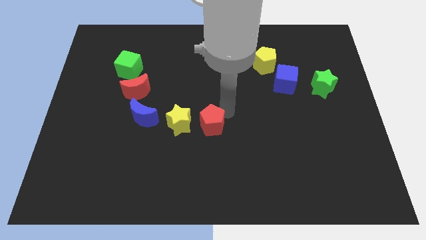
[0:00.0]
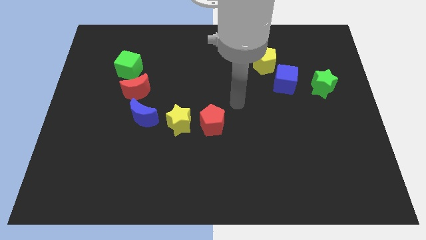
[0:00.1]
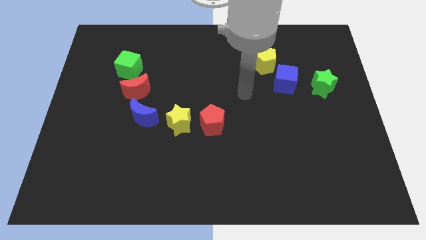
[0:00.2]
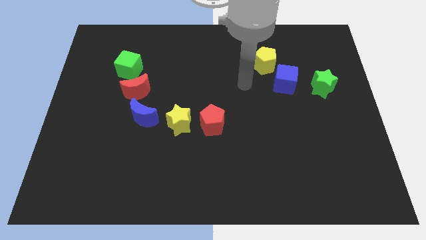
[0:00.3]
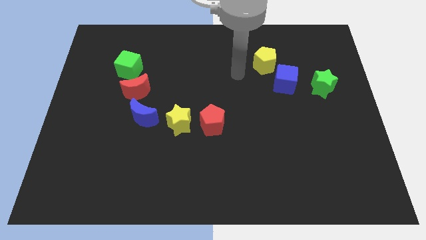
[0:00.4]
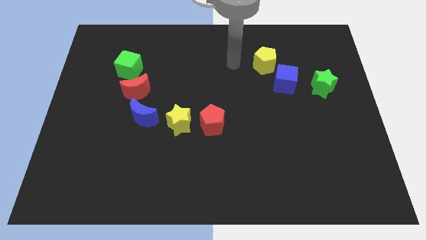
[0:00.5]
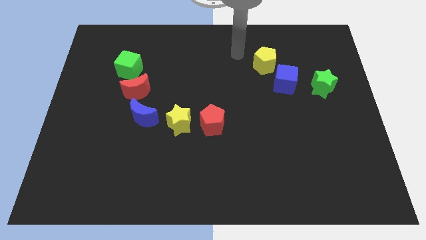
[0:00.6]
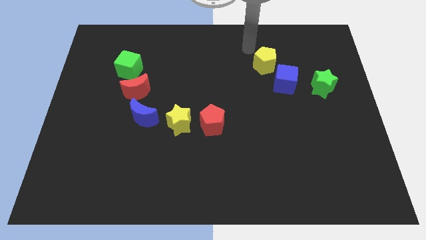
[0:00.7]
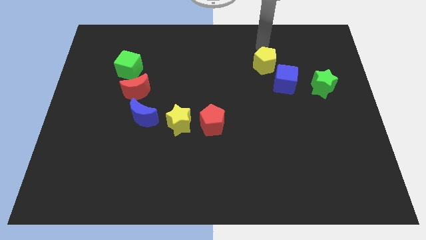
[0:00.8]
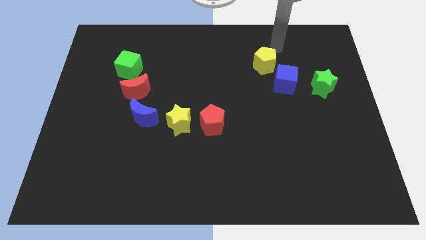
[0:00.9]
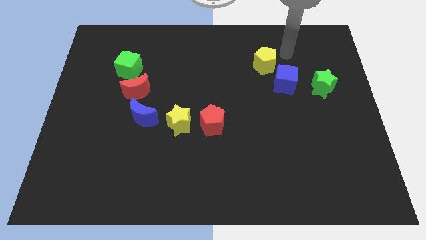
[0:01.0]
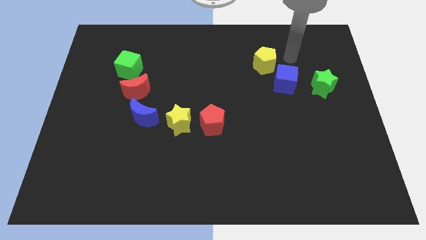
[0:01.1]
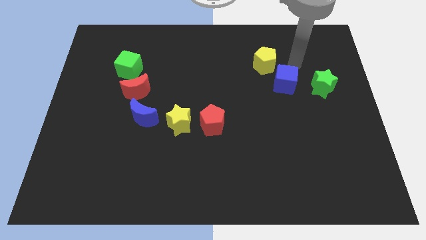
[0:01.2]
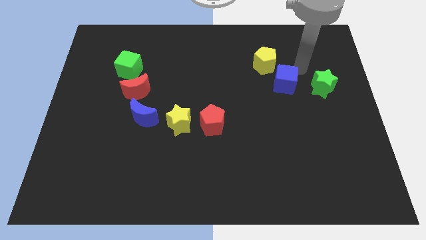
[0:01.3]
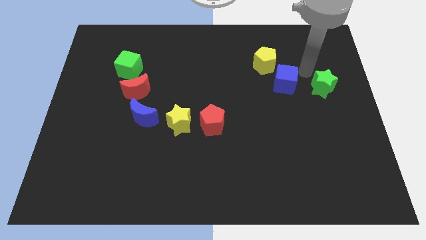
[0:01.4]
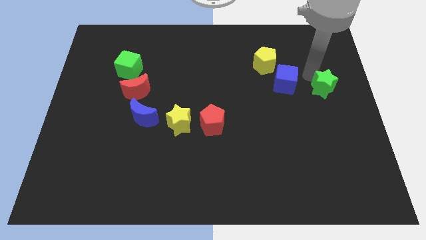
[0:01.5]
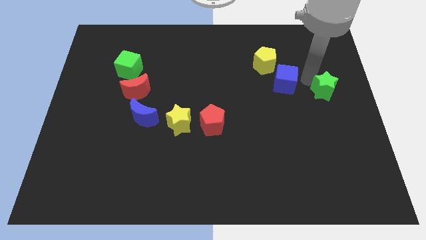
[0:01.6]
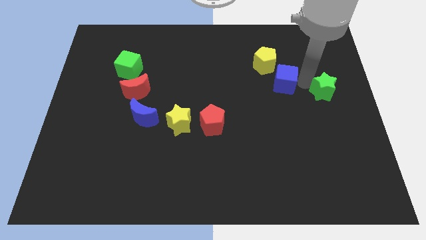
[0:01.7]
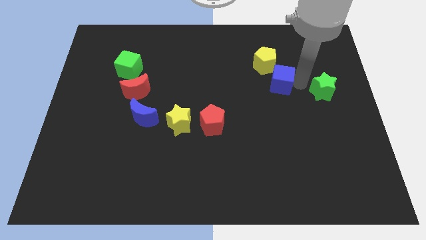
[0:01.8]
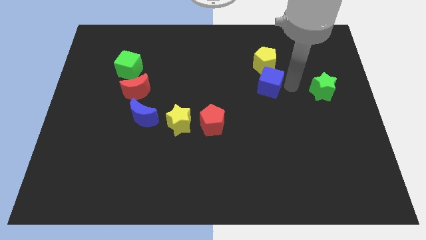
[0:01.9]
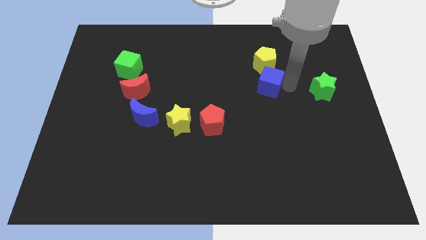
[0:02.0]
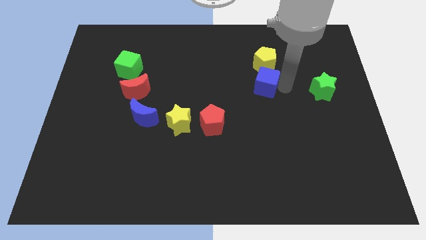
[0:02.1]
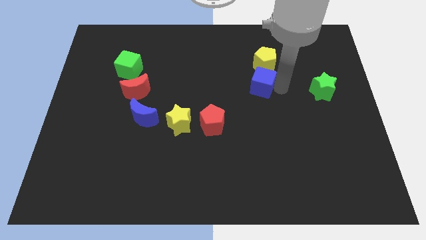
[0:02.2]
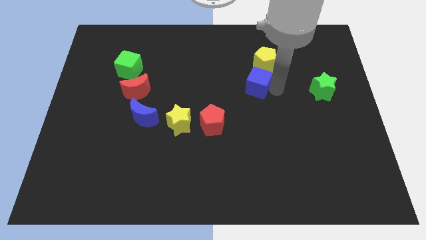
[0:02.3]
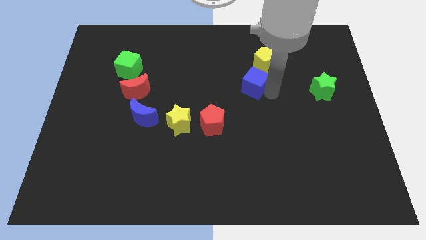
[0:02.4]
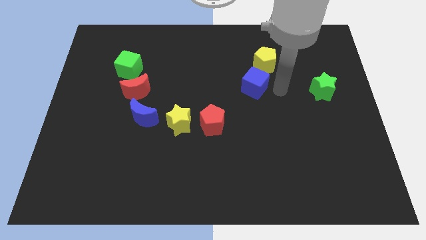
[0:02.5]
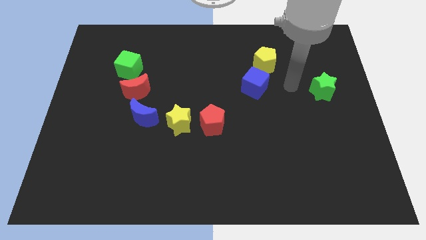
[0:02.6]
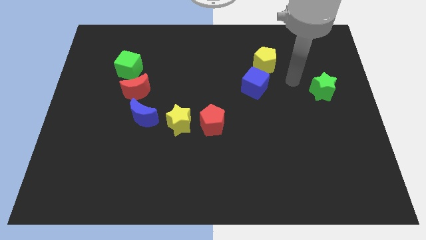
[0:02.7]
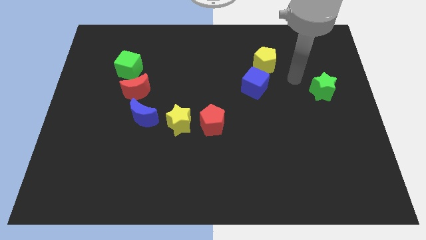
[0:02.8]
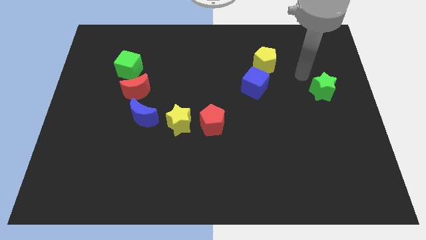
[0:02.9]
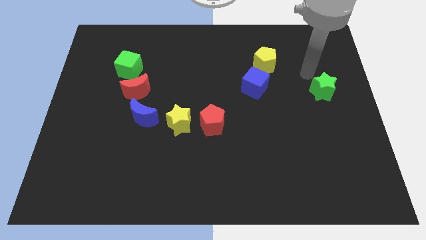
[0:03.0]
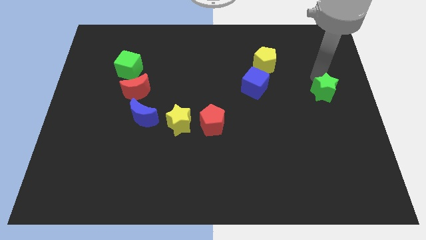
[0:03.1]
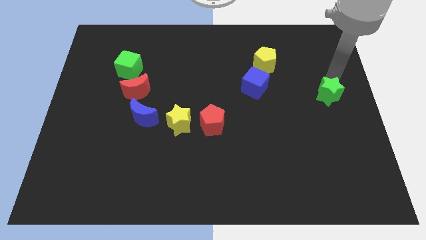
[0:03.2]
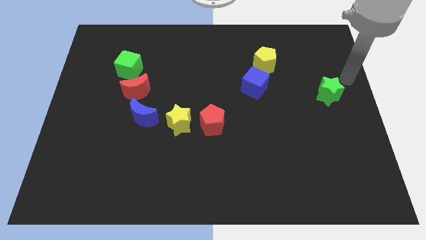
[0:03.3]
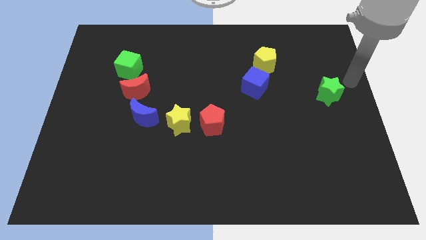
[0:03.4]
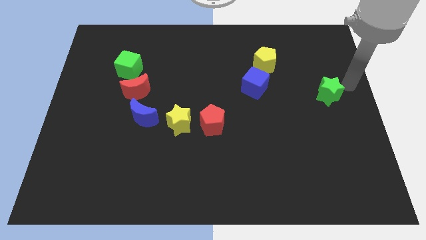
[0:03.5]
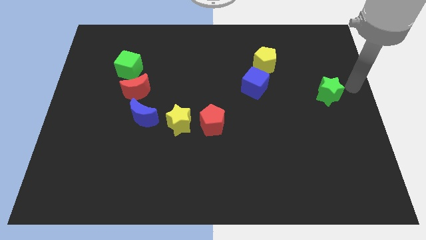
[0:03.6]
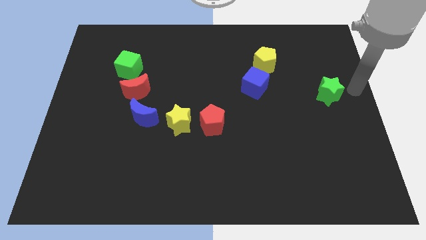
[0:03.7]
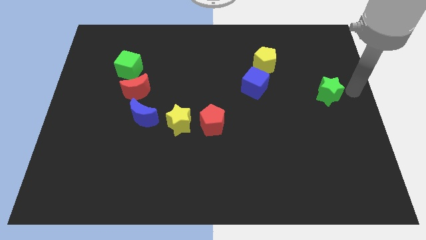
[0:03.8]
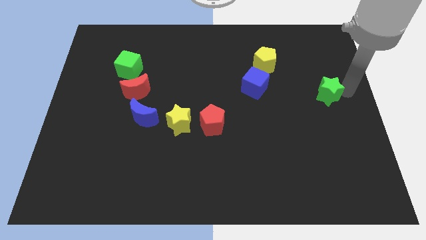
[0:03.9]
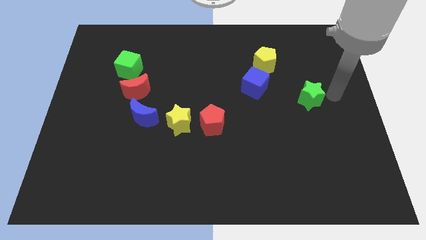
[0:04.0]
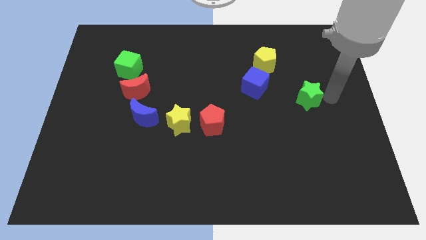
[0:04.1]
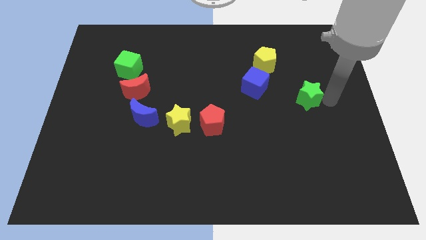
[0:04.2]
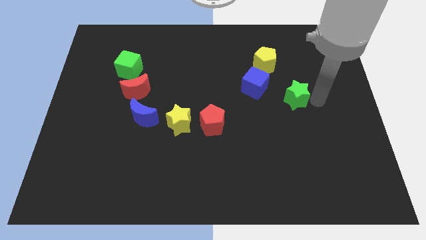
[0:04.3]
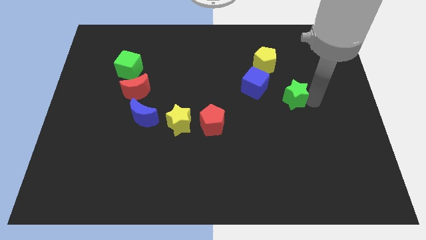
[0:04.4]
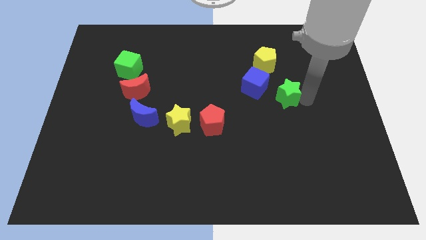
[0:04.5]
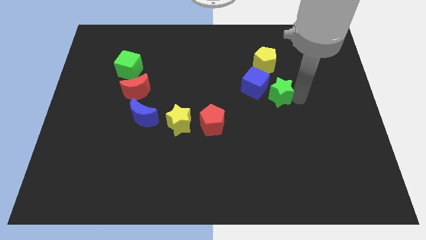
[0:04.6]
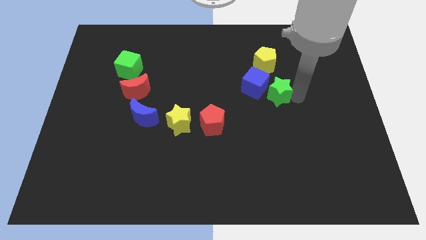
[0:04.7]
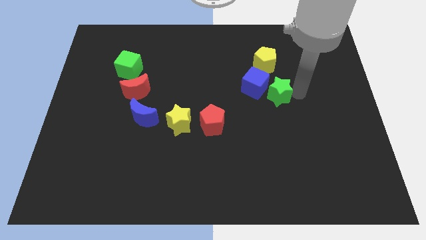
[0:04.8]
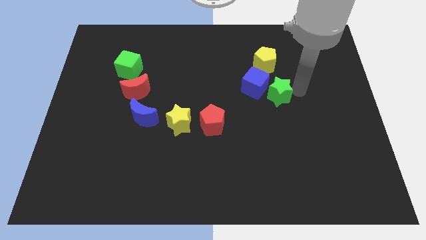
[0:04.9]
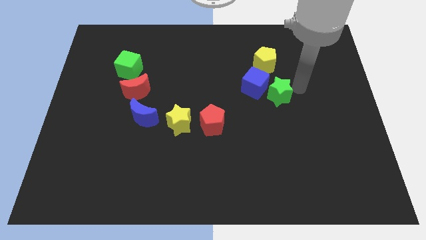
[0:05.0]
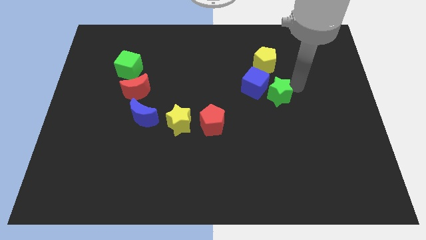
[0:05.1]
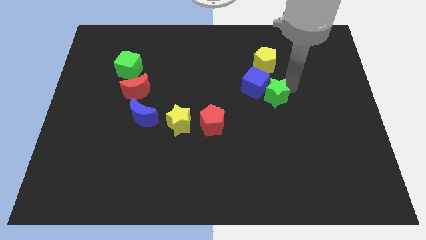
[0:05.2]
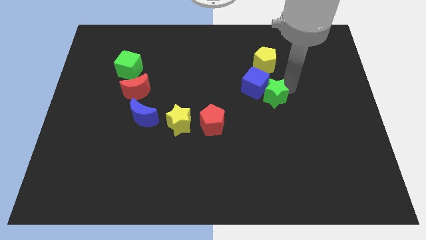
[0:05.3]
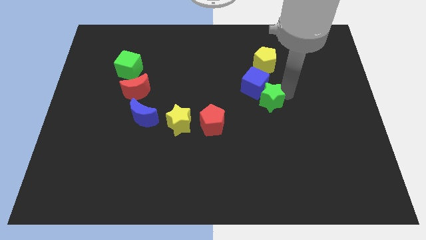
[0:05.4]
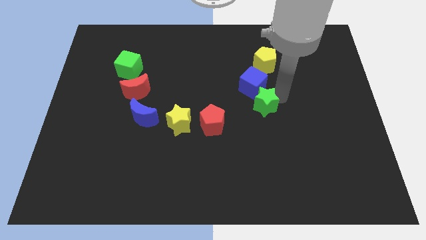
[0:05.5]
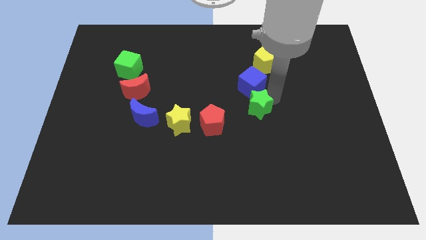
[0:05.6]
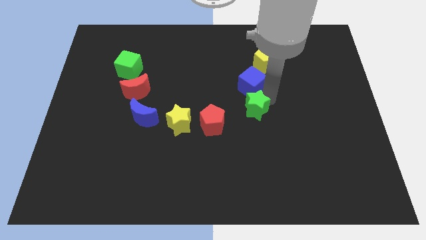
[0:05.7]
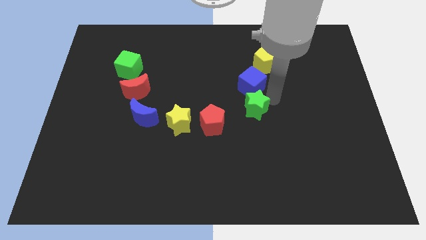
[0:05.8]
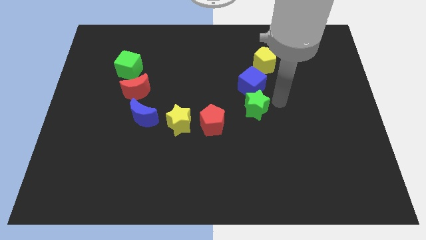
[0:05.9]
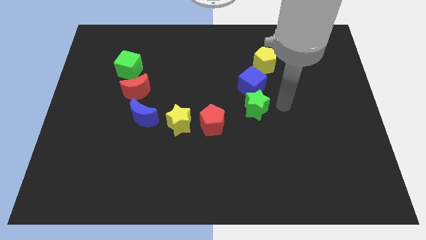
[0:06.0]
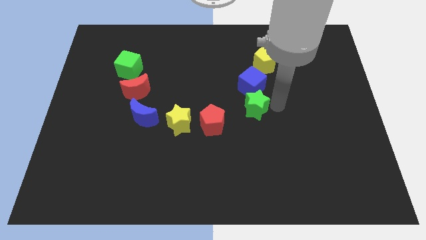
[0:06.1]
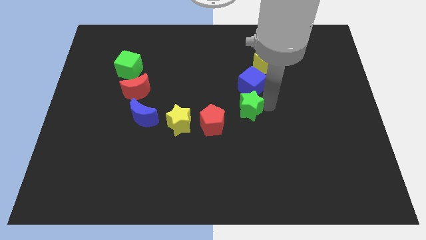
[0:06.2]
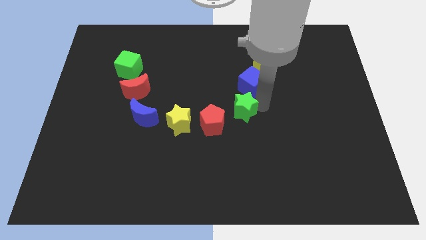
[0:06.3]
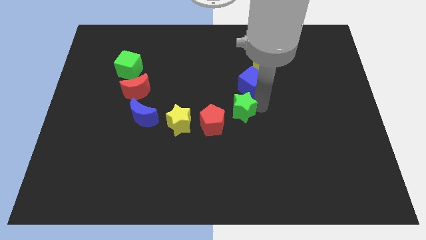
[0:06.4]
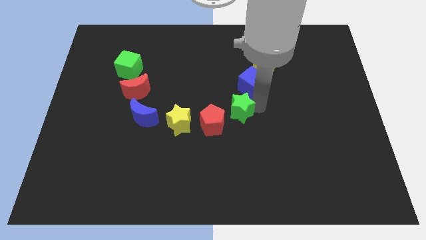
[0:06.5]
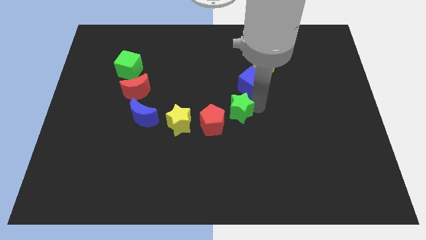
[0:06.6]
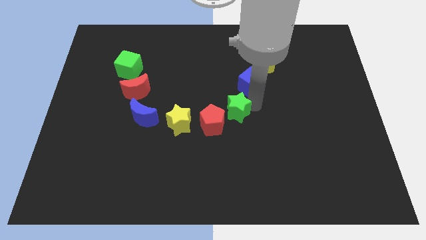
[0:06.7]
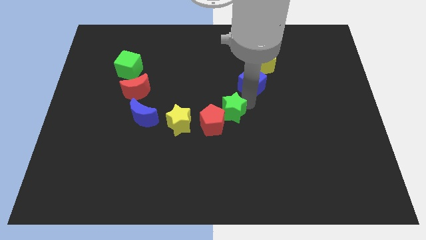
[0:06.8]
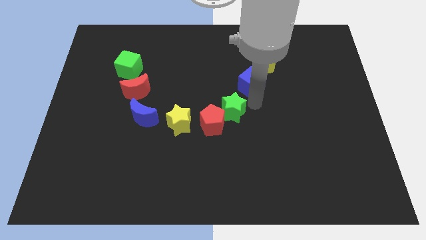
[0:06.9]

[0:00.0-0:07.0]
place the blue cube and green star together to form a diagonal line

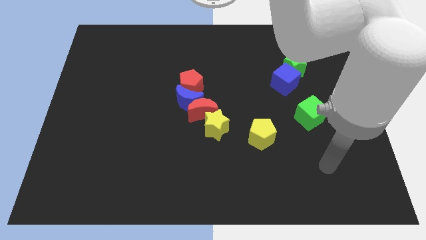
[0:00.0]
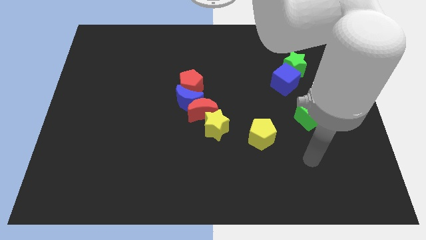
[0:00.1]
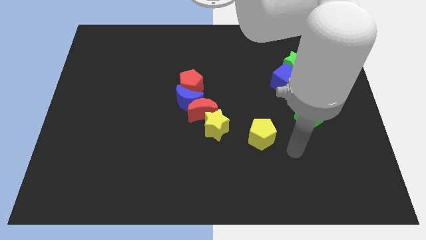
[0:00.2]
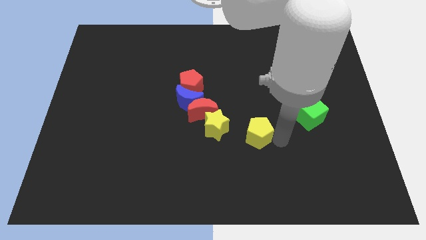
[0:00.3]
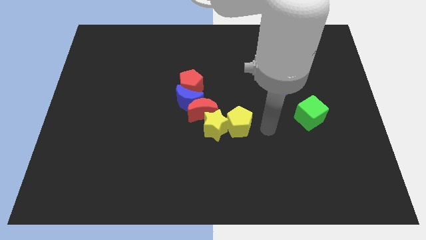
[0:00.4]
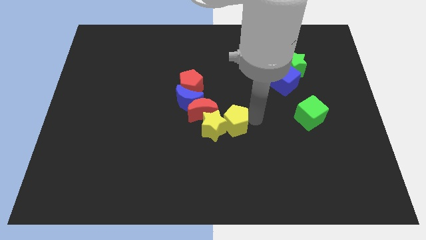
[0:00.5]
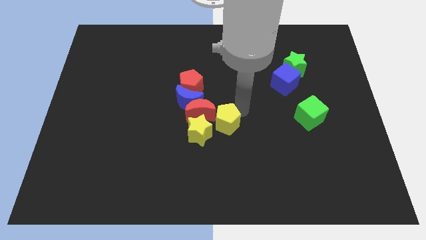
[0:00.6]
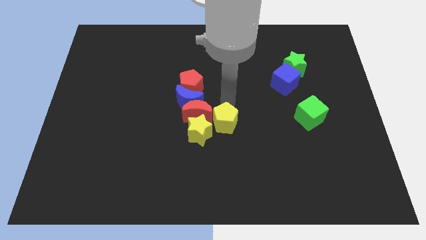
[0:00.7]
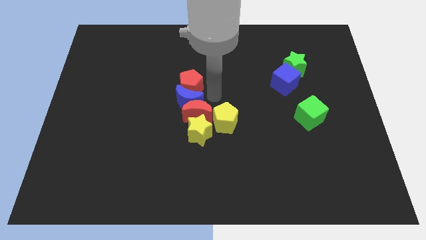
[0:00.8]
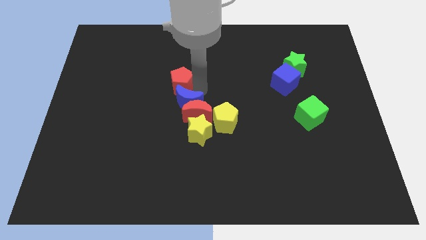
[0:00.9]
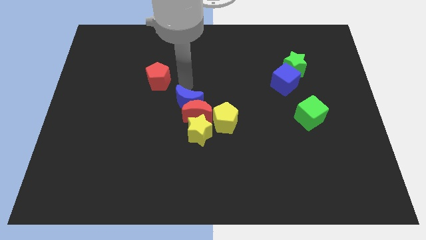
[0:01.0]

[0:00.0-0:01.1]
push the yellow star with the yellow pentagon towards the center

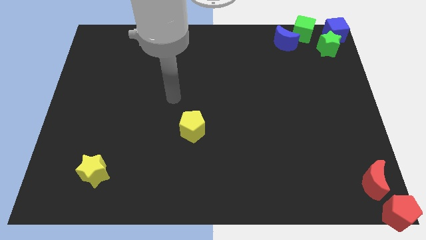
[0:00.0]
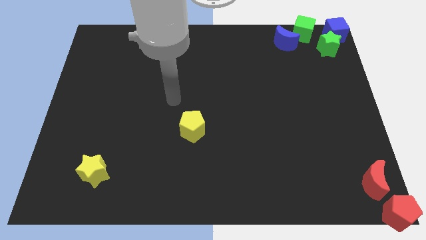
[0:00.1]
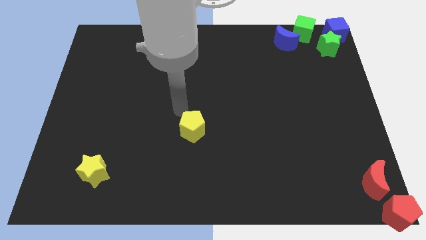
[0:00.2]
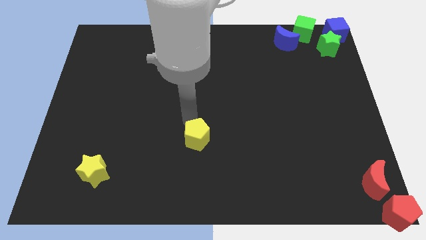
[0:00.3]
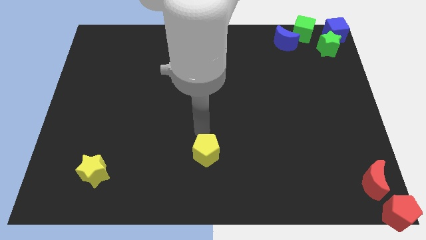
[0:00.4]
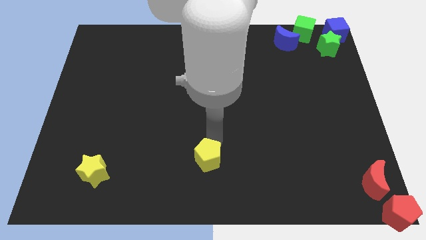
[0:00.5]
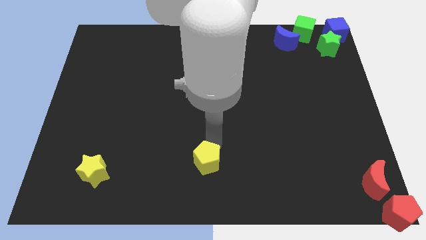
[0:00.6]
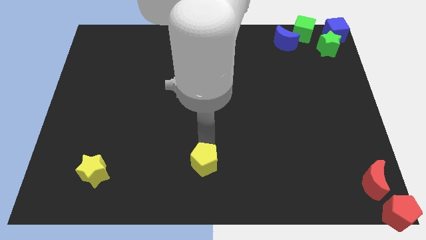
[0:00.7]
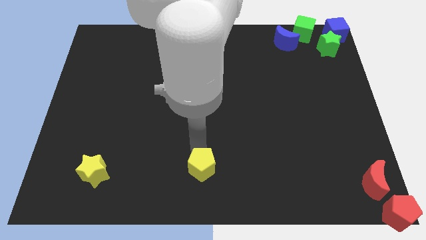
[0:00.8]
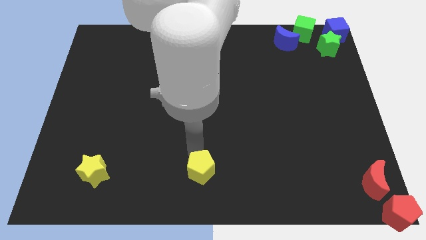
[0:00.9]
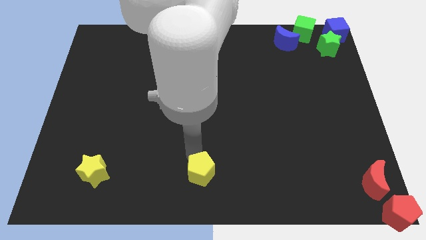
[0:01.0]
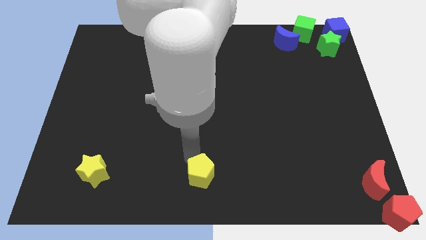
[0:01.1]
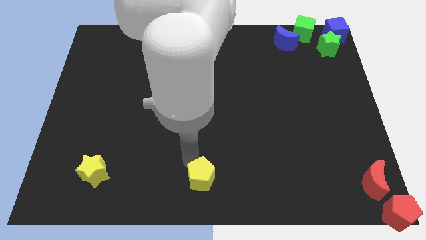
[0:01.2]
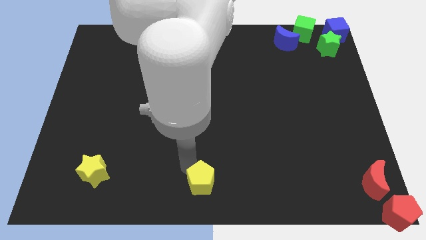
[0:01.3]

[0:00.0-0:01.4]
put the yellow pentagon horizontally right to the yellow star
